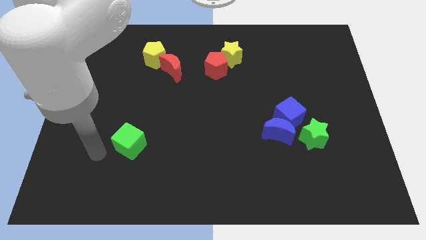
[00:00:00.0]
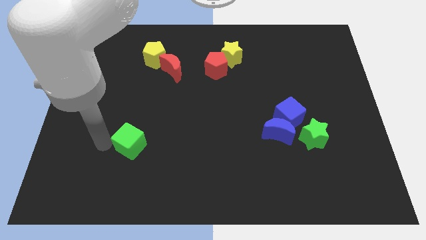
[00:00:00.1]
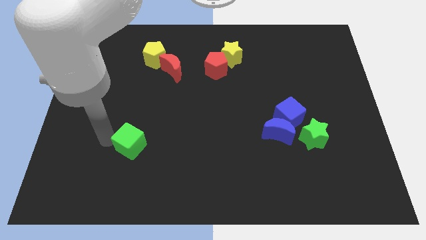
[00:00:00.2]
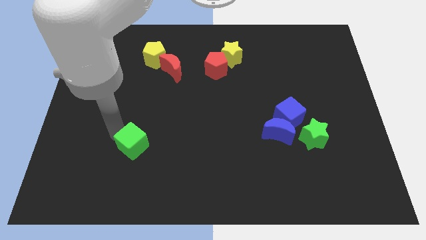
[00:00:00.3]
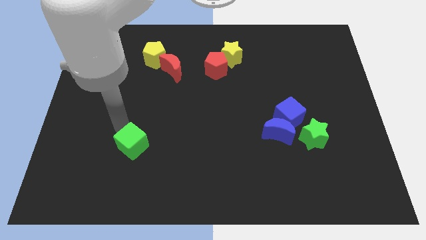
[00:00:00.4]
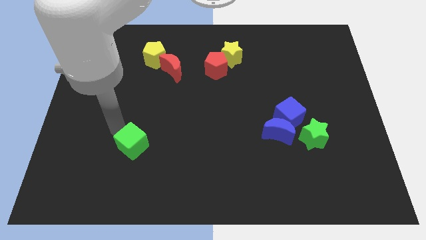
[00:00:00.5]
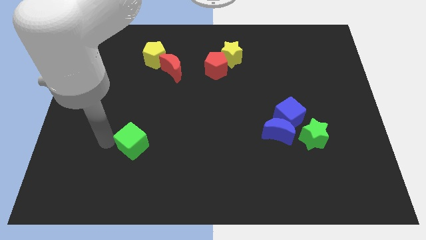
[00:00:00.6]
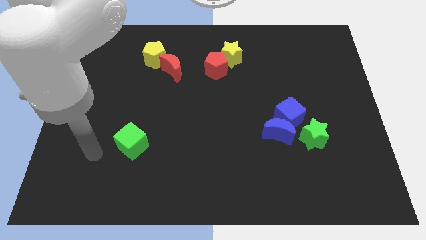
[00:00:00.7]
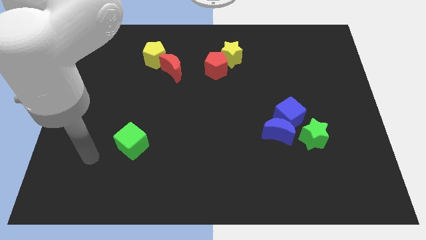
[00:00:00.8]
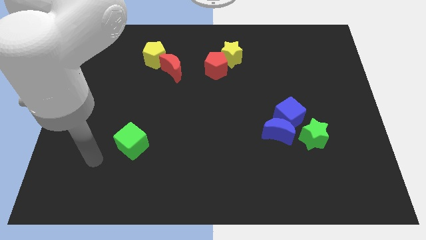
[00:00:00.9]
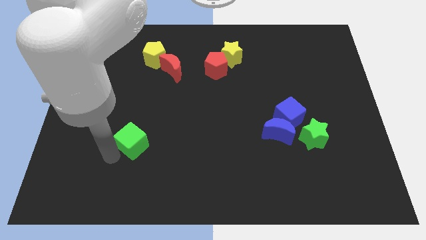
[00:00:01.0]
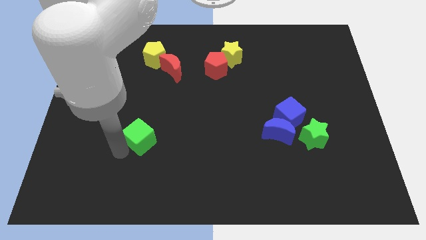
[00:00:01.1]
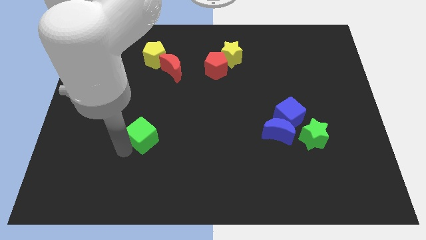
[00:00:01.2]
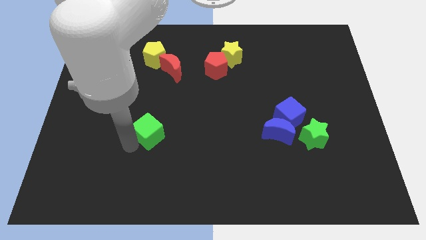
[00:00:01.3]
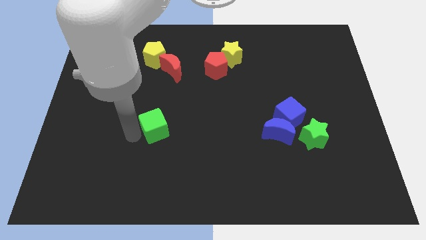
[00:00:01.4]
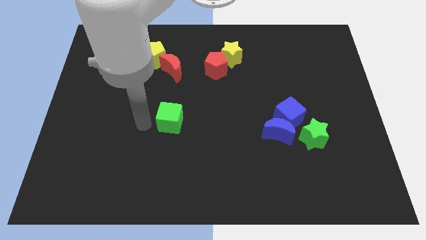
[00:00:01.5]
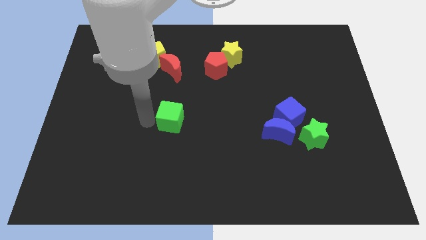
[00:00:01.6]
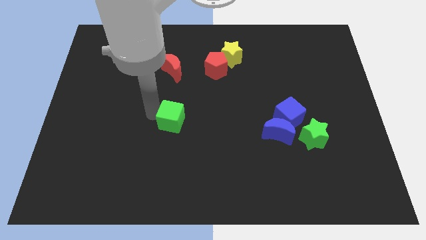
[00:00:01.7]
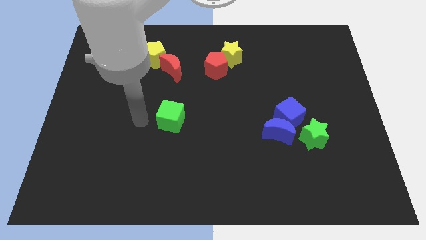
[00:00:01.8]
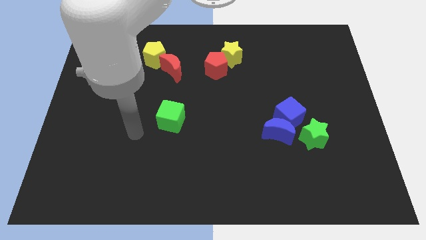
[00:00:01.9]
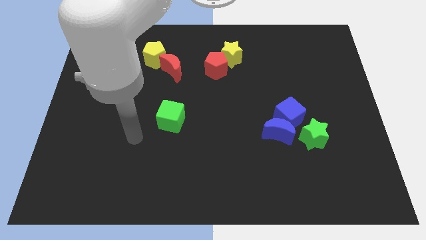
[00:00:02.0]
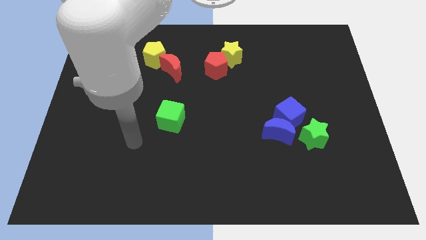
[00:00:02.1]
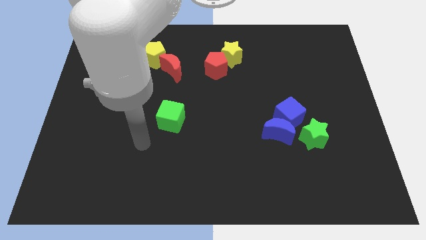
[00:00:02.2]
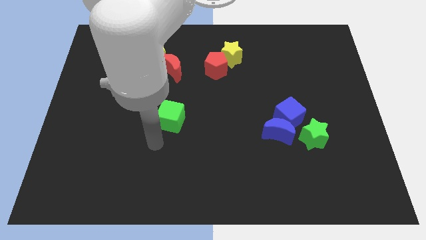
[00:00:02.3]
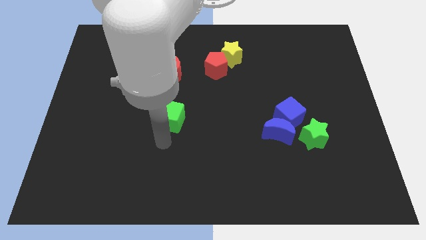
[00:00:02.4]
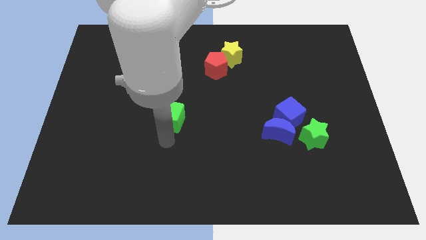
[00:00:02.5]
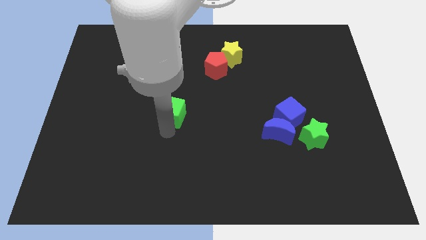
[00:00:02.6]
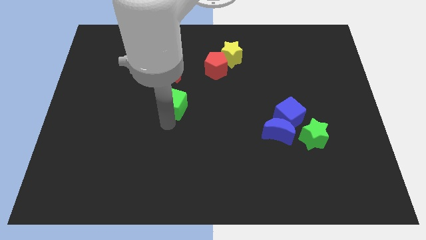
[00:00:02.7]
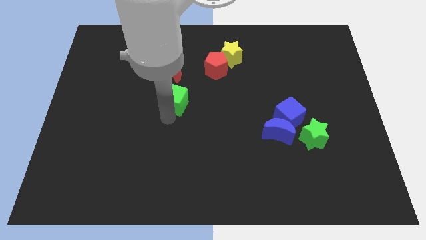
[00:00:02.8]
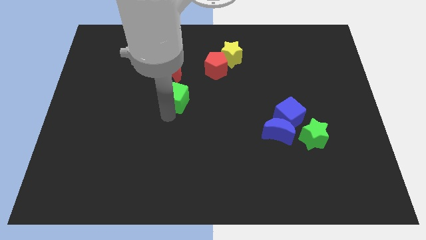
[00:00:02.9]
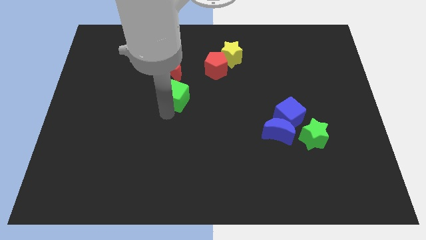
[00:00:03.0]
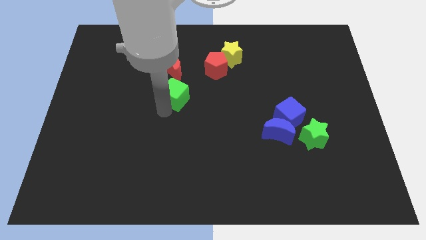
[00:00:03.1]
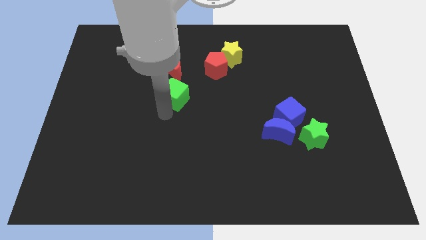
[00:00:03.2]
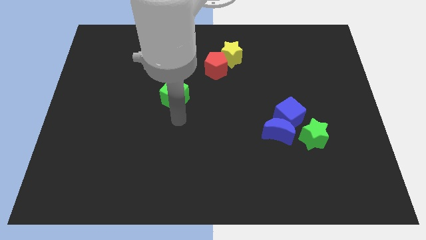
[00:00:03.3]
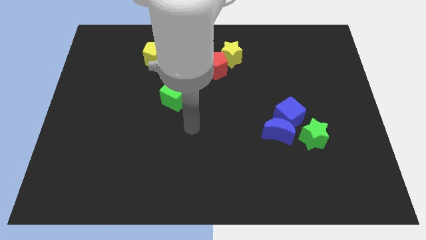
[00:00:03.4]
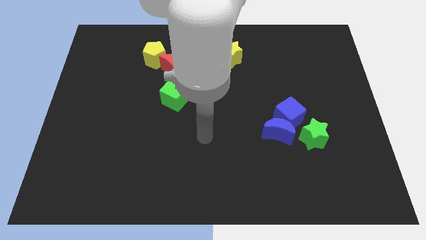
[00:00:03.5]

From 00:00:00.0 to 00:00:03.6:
push the green cube to the bottom of the red crescent

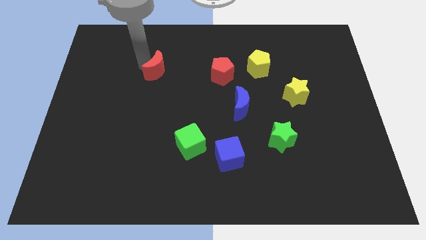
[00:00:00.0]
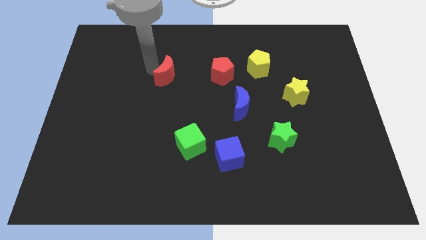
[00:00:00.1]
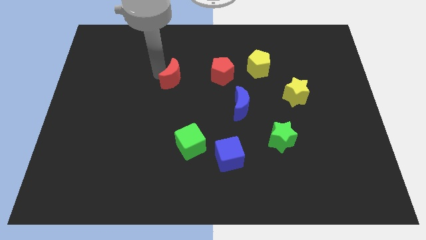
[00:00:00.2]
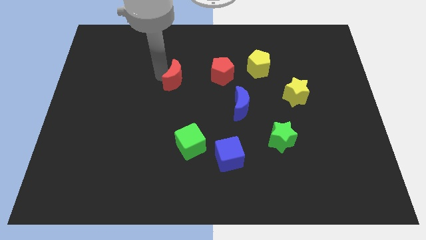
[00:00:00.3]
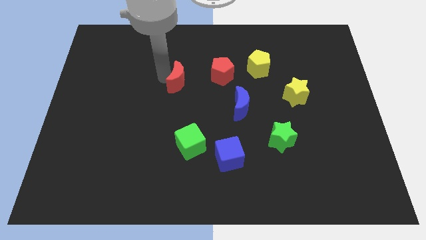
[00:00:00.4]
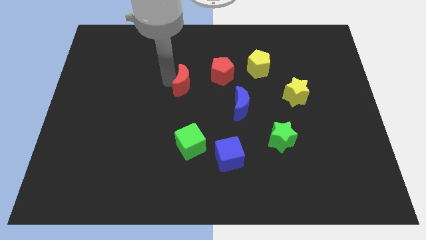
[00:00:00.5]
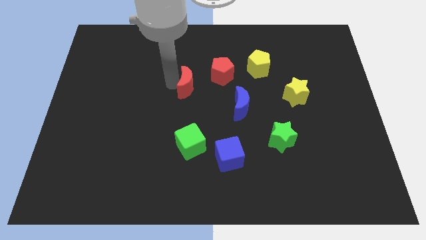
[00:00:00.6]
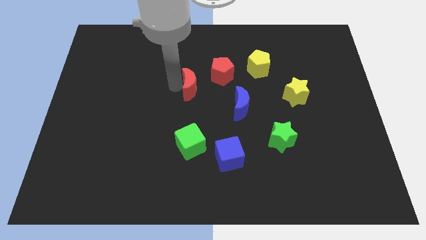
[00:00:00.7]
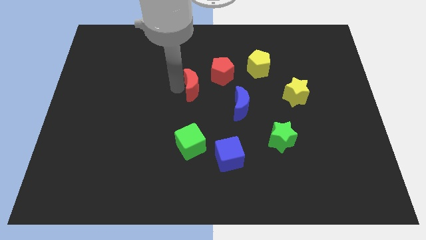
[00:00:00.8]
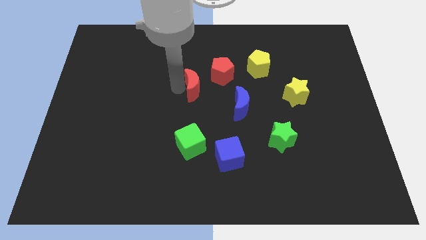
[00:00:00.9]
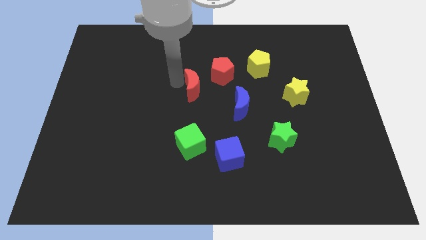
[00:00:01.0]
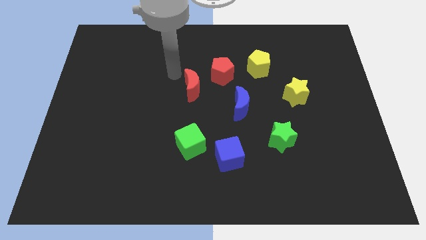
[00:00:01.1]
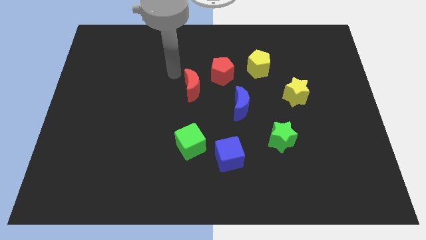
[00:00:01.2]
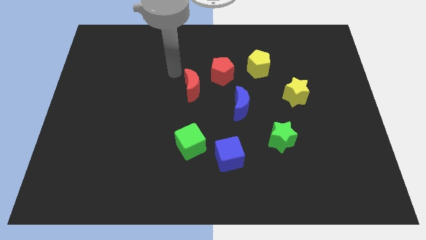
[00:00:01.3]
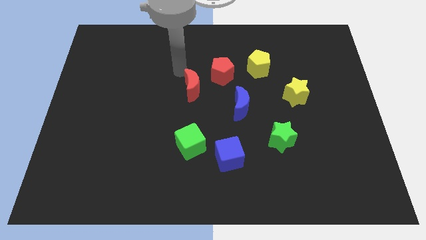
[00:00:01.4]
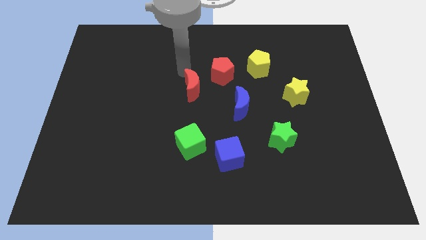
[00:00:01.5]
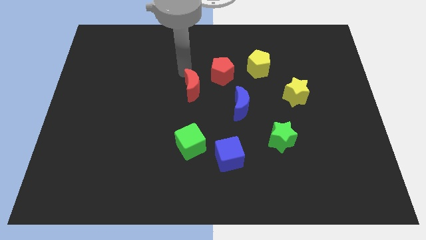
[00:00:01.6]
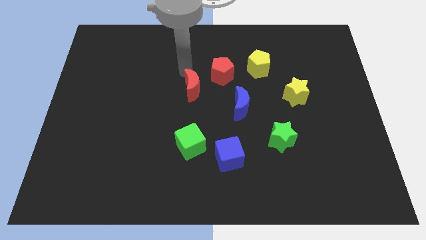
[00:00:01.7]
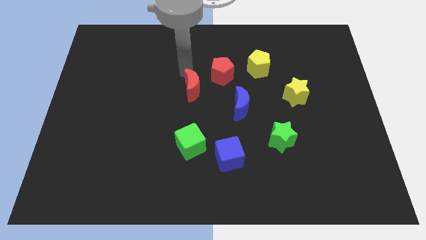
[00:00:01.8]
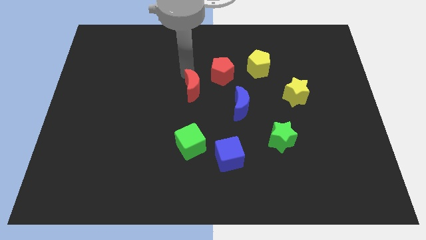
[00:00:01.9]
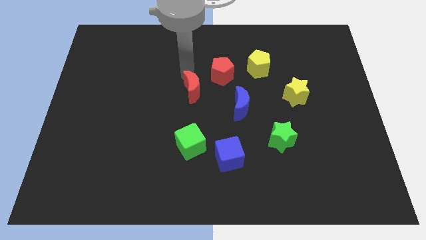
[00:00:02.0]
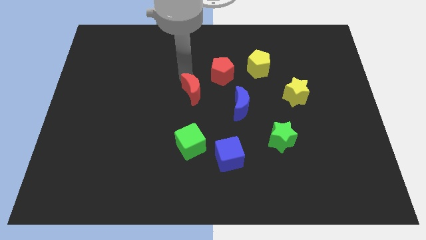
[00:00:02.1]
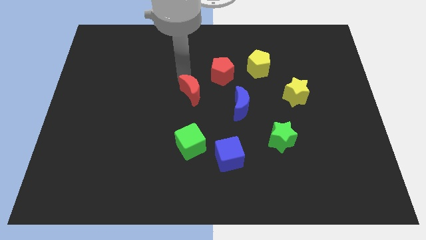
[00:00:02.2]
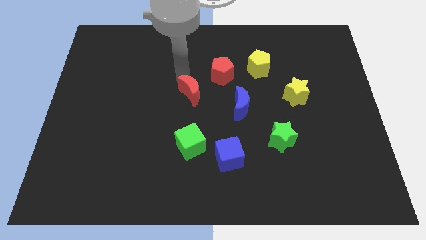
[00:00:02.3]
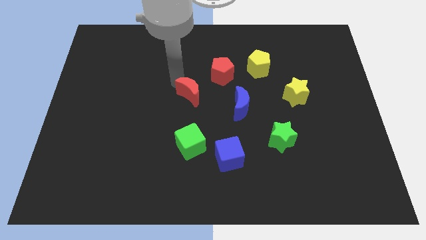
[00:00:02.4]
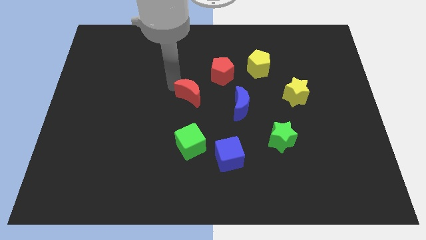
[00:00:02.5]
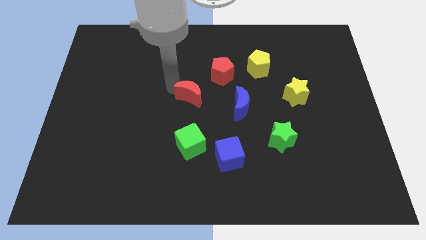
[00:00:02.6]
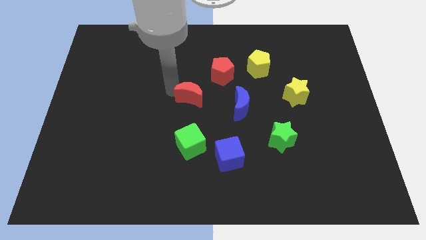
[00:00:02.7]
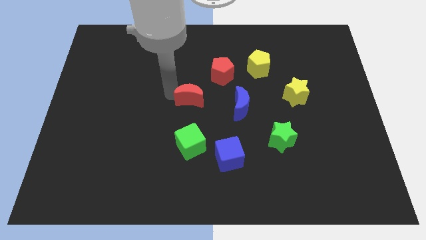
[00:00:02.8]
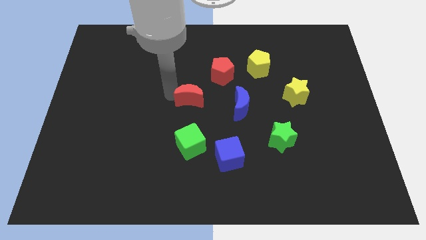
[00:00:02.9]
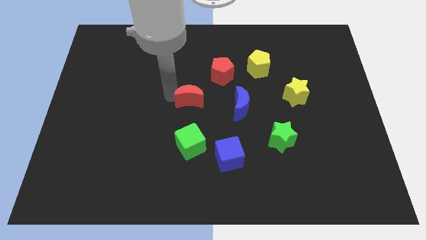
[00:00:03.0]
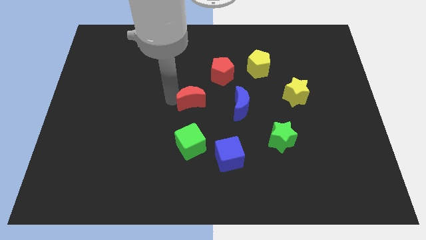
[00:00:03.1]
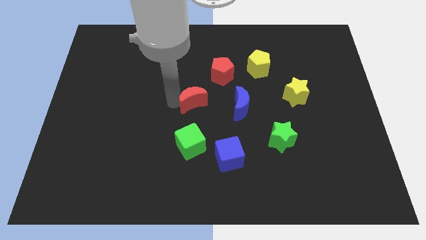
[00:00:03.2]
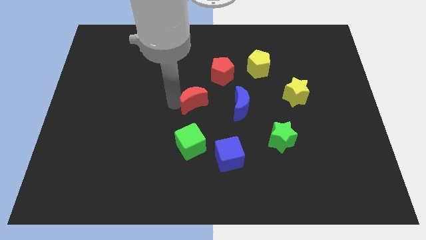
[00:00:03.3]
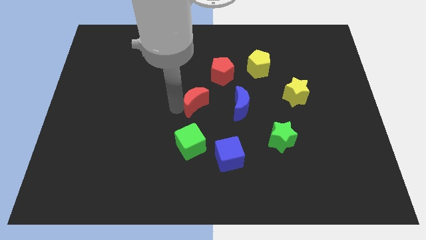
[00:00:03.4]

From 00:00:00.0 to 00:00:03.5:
move the red crescent towards the group of blocks to make a circle

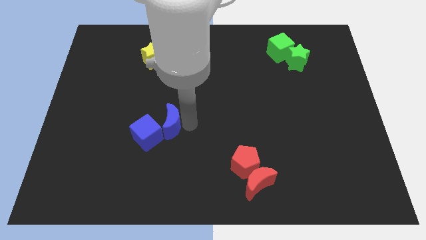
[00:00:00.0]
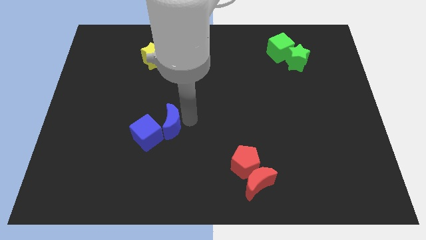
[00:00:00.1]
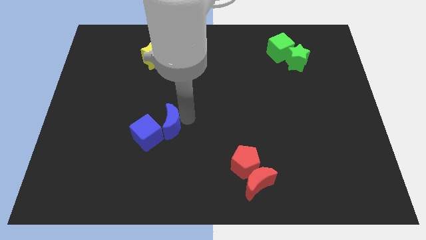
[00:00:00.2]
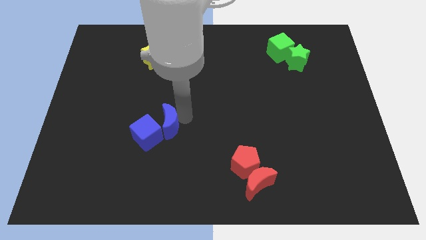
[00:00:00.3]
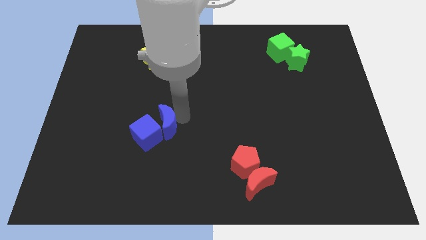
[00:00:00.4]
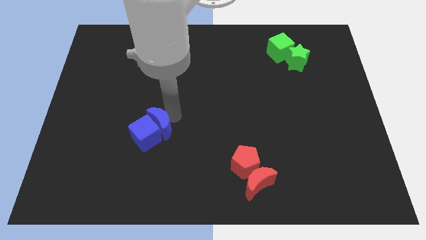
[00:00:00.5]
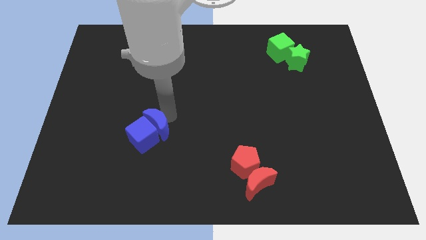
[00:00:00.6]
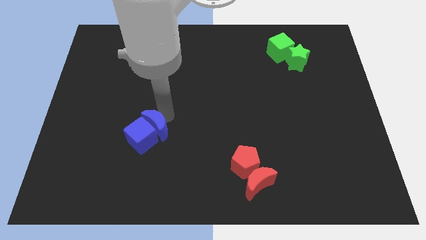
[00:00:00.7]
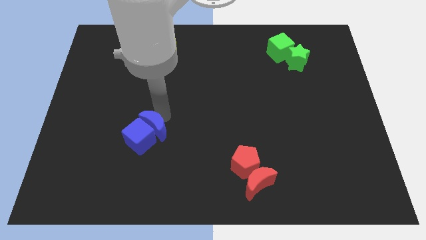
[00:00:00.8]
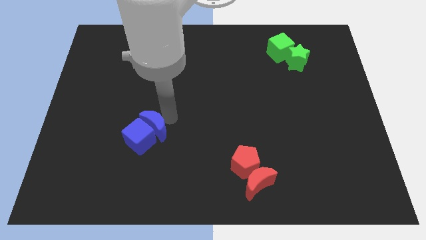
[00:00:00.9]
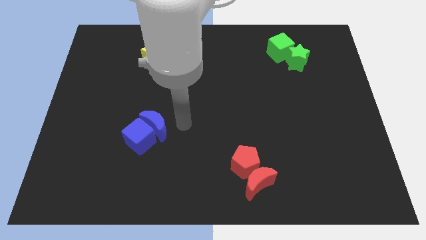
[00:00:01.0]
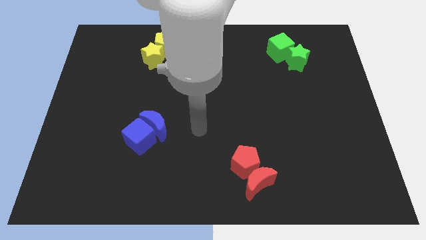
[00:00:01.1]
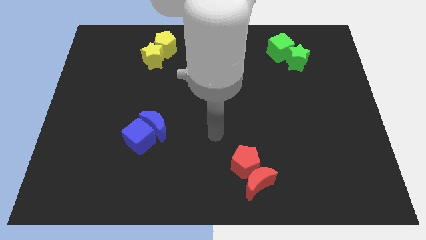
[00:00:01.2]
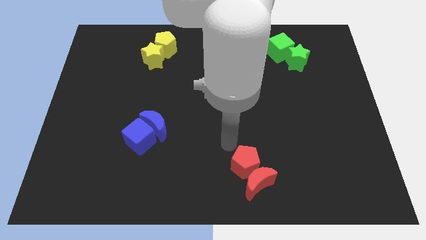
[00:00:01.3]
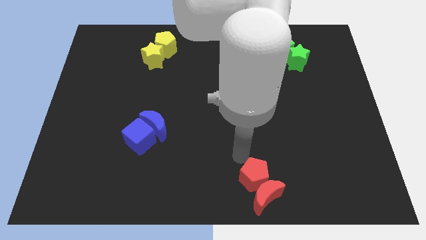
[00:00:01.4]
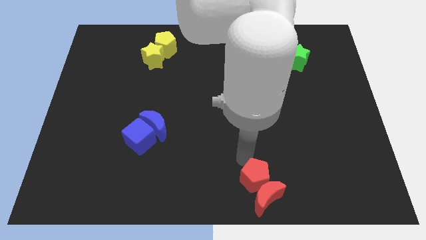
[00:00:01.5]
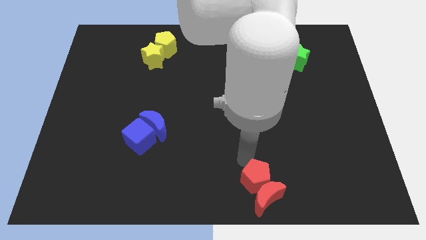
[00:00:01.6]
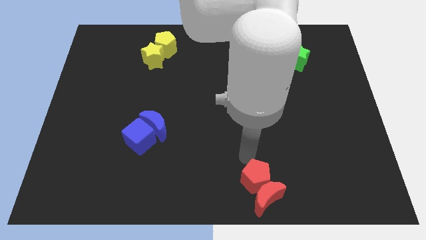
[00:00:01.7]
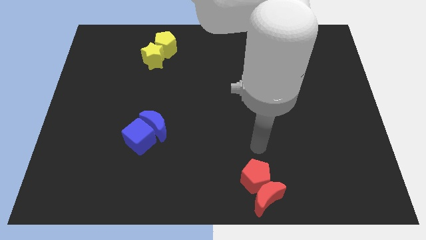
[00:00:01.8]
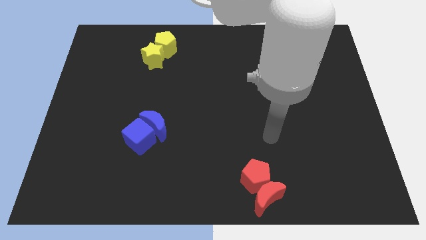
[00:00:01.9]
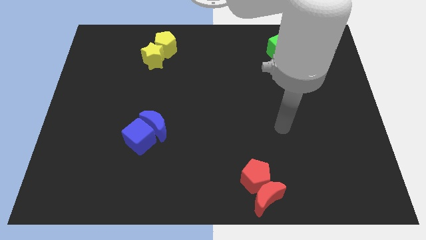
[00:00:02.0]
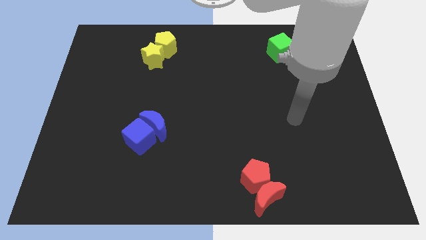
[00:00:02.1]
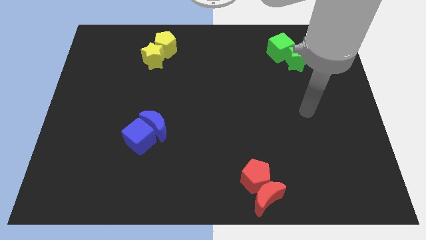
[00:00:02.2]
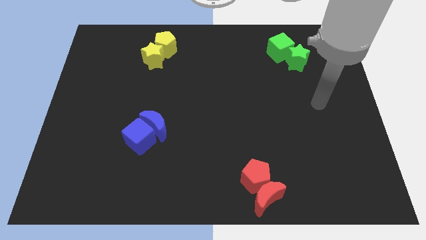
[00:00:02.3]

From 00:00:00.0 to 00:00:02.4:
push the red pentagon along with the red crescent slightly to the bottom side
